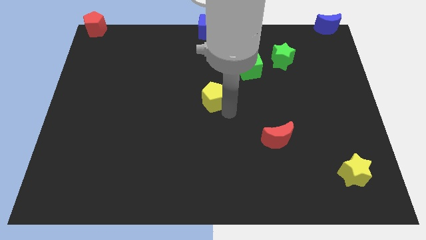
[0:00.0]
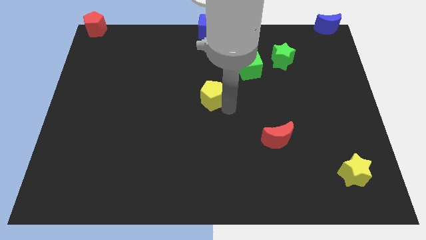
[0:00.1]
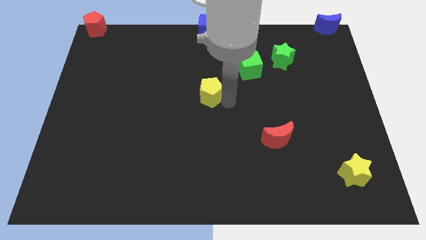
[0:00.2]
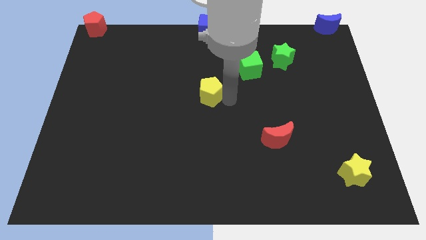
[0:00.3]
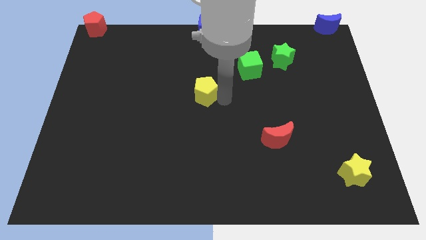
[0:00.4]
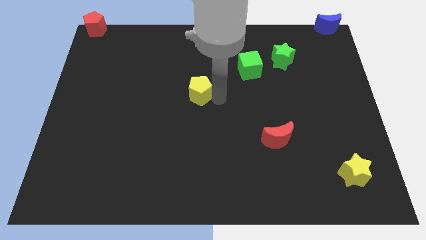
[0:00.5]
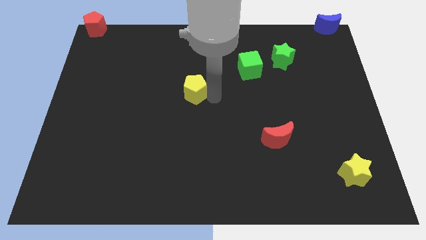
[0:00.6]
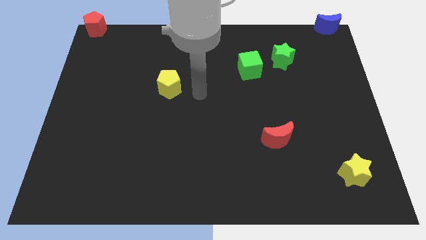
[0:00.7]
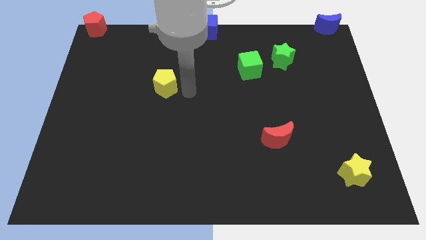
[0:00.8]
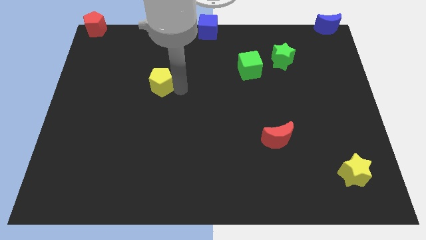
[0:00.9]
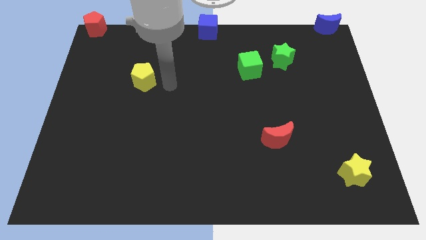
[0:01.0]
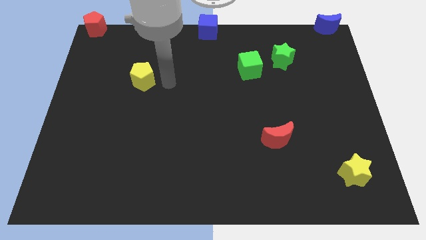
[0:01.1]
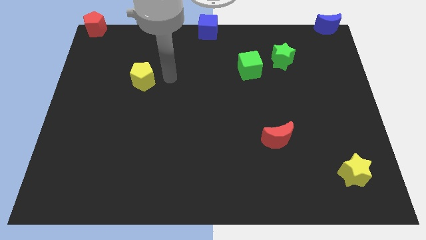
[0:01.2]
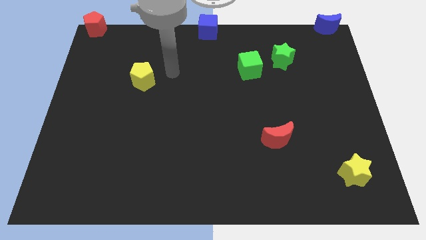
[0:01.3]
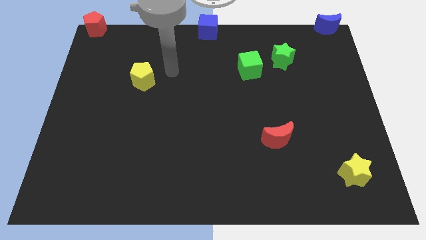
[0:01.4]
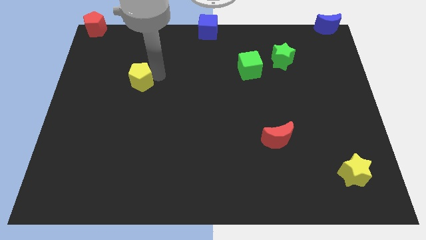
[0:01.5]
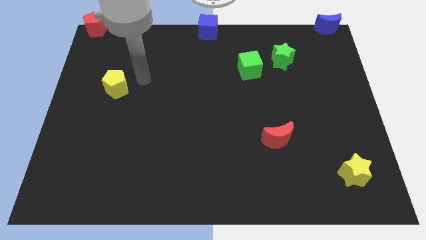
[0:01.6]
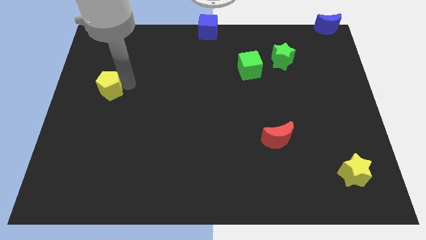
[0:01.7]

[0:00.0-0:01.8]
slide the yellow pentagon towards the centre left

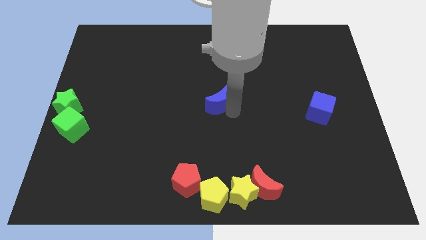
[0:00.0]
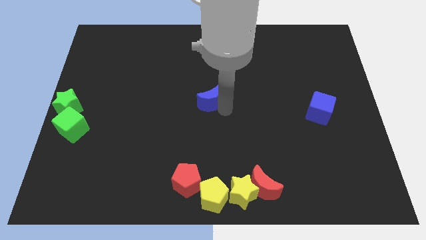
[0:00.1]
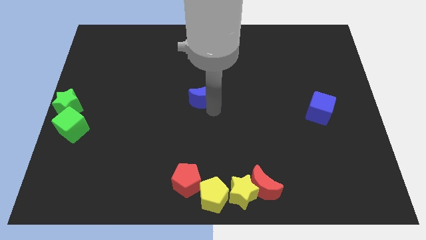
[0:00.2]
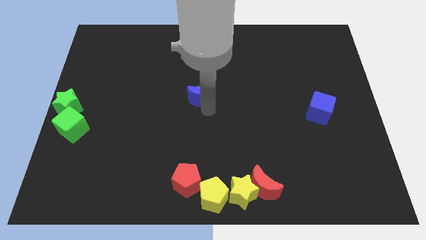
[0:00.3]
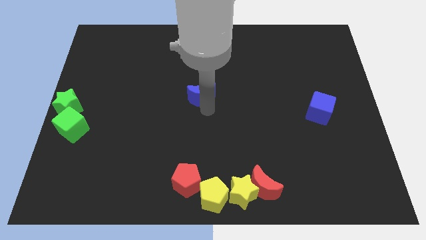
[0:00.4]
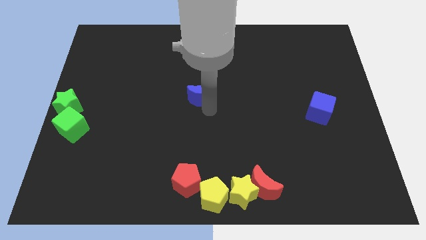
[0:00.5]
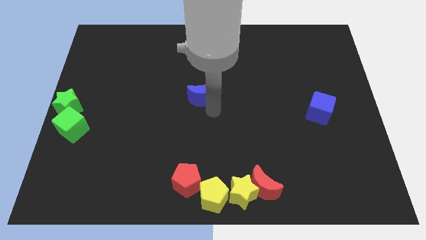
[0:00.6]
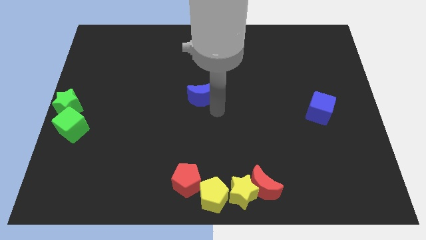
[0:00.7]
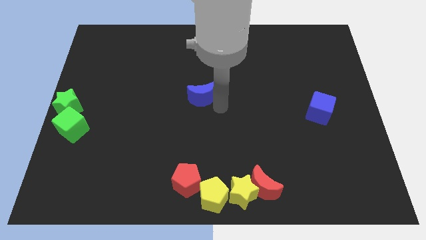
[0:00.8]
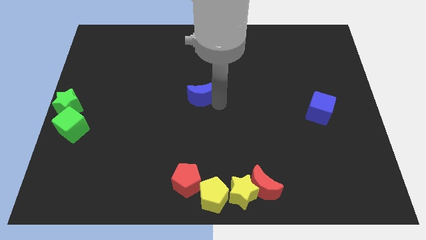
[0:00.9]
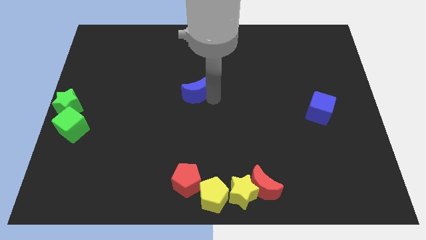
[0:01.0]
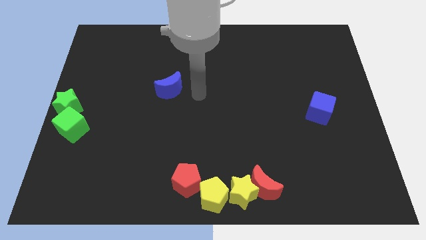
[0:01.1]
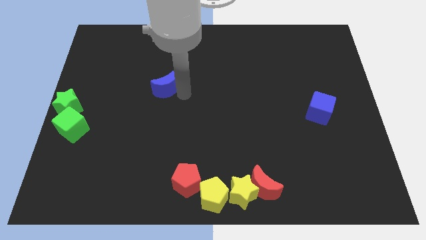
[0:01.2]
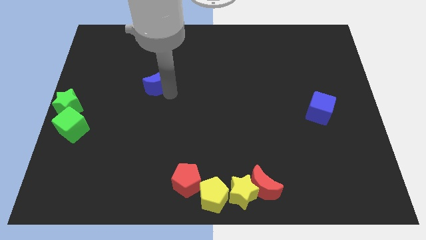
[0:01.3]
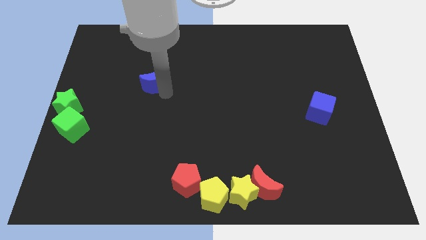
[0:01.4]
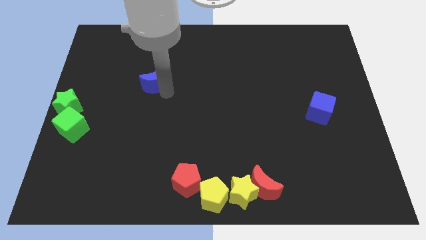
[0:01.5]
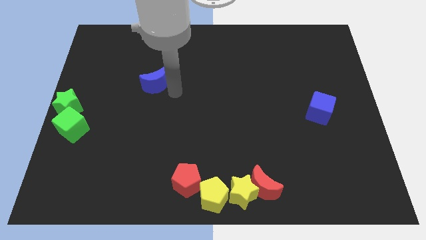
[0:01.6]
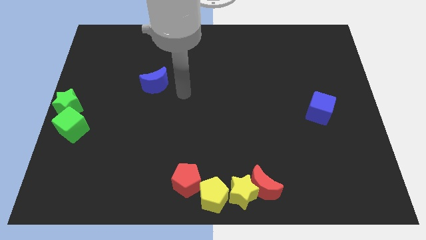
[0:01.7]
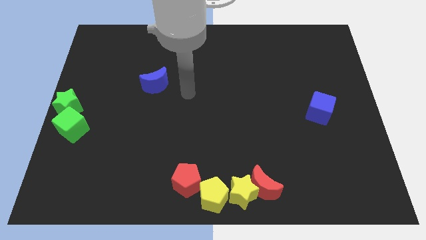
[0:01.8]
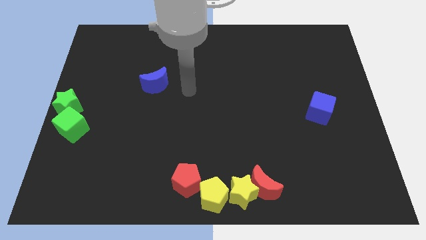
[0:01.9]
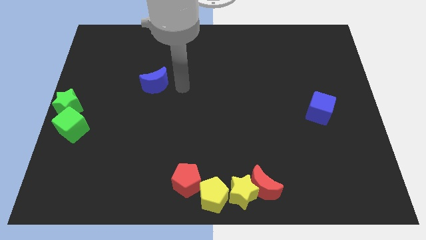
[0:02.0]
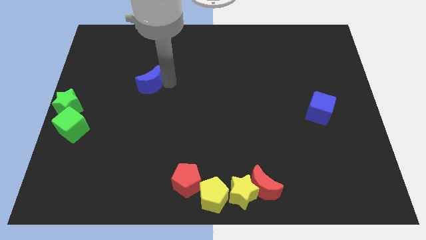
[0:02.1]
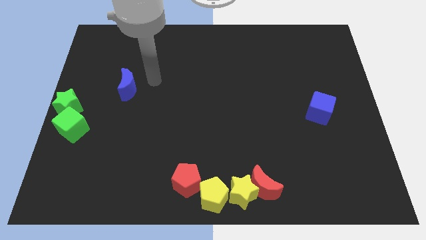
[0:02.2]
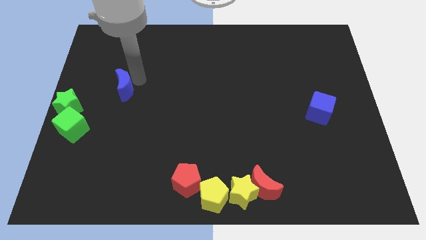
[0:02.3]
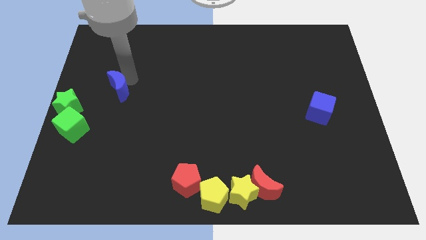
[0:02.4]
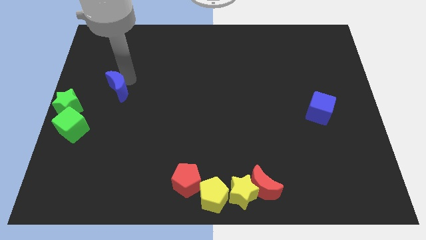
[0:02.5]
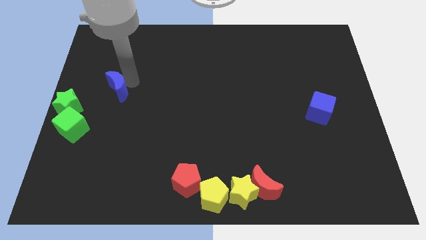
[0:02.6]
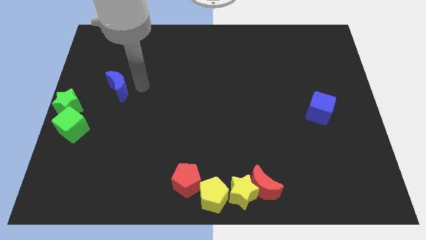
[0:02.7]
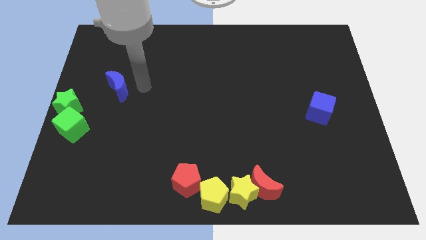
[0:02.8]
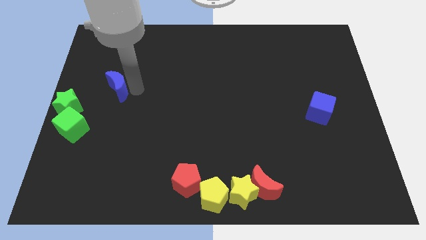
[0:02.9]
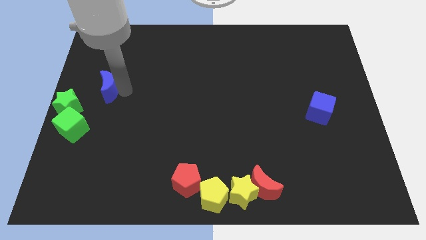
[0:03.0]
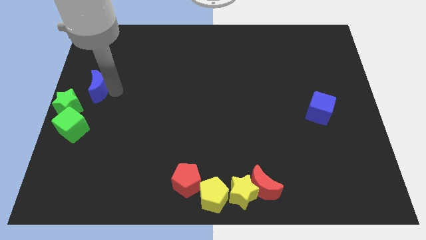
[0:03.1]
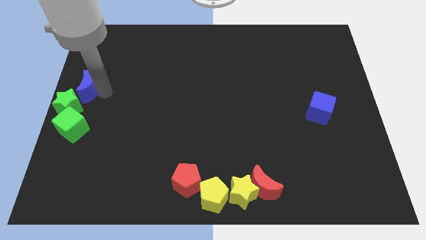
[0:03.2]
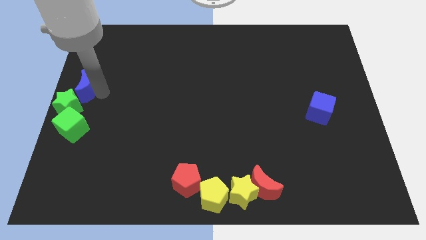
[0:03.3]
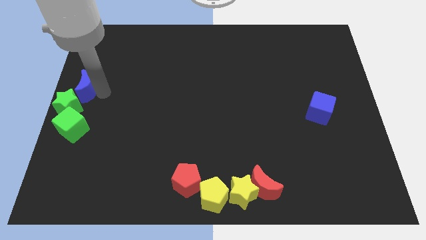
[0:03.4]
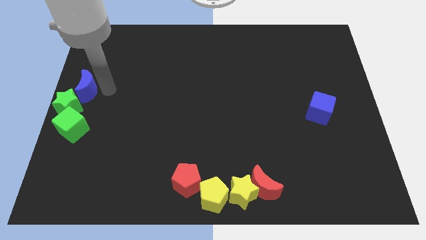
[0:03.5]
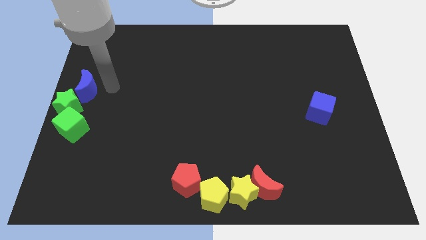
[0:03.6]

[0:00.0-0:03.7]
move the blue moon close to the green blocks

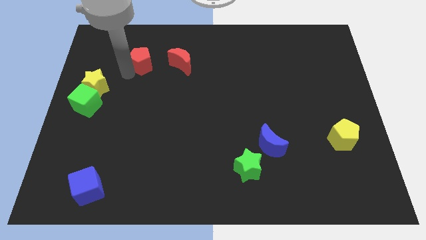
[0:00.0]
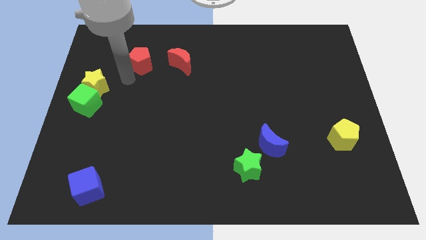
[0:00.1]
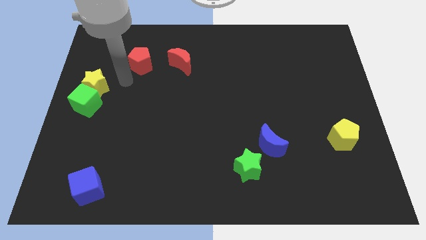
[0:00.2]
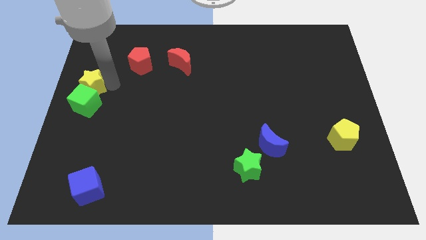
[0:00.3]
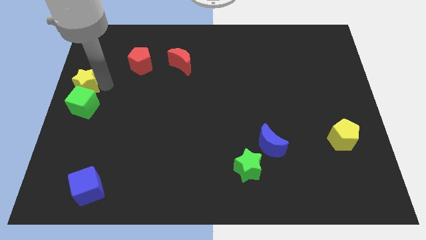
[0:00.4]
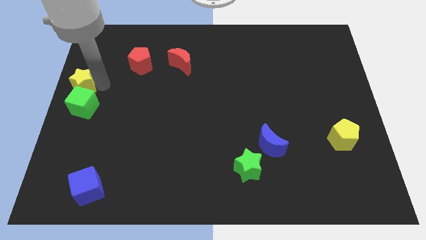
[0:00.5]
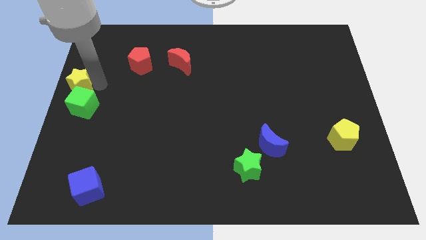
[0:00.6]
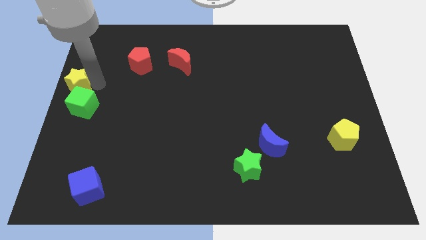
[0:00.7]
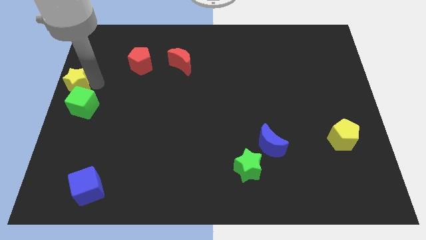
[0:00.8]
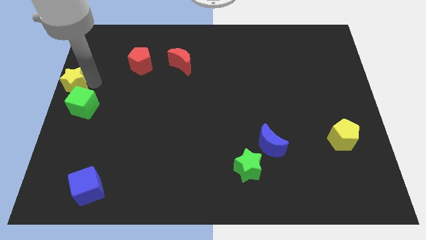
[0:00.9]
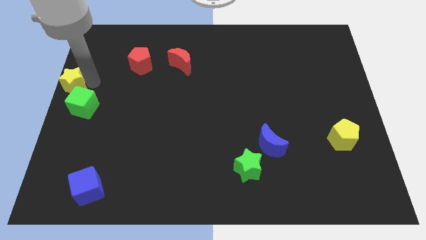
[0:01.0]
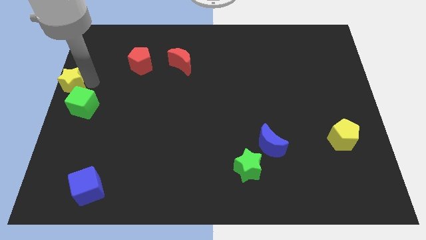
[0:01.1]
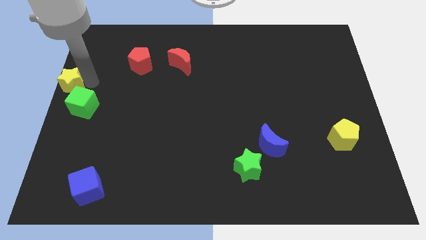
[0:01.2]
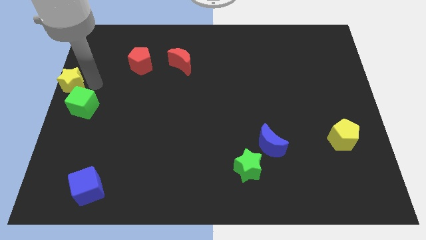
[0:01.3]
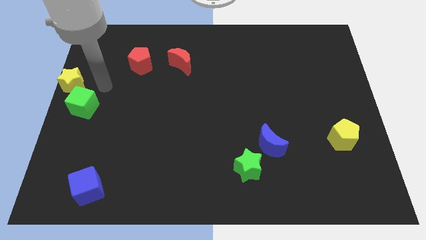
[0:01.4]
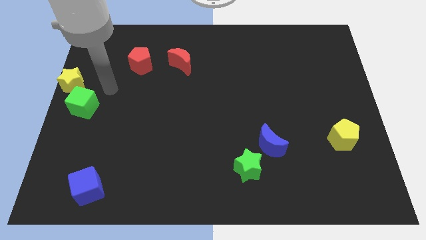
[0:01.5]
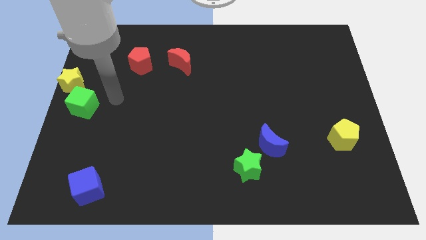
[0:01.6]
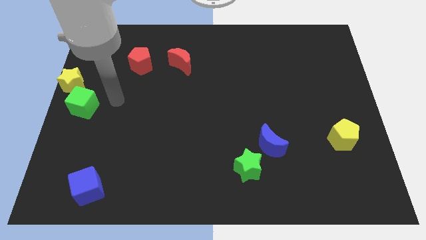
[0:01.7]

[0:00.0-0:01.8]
place the yellow star at the left center of the board

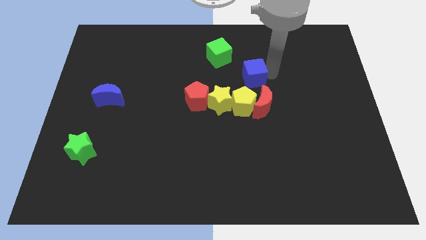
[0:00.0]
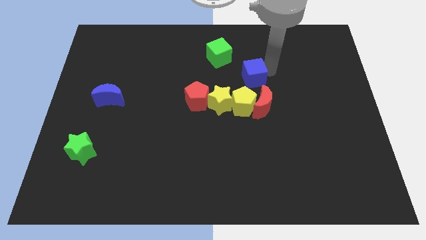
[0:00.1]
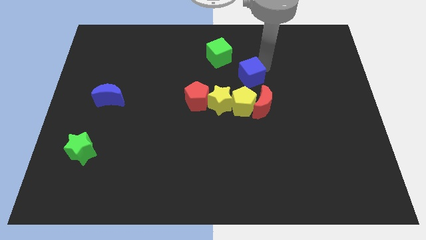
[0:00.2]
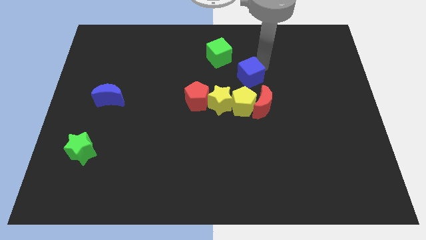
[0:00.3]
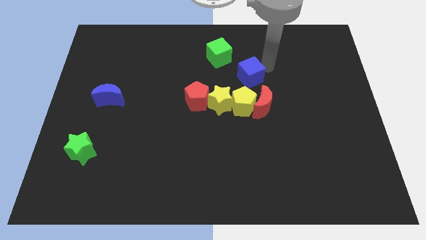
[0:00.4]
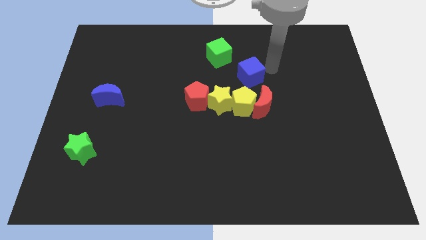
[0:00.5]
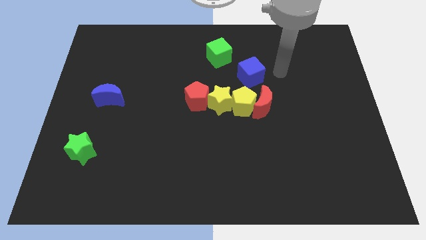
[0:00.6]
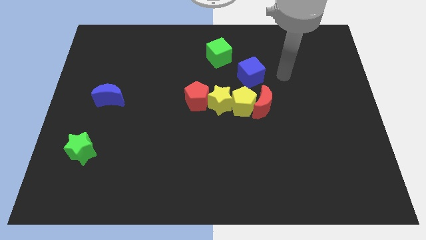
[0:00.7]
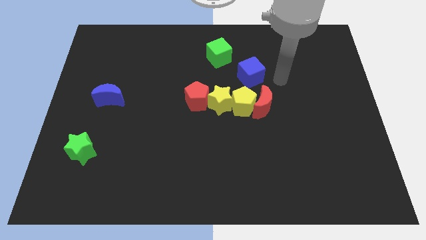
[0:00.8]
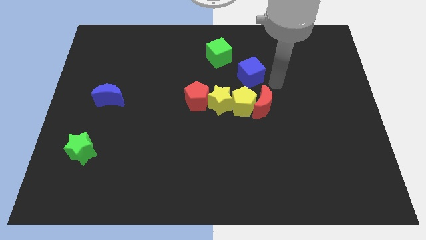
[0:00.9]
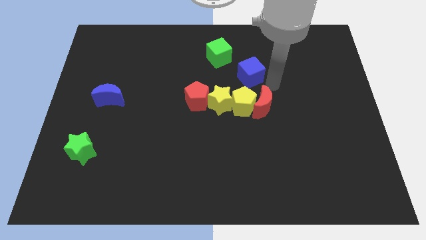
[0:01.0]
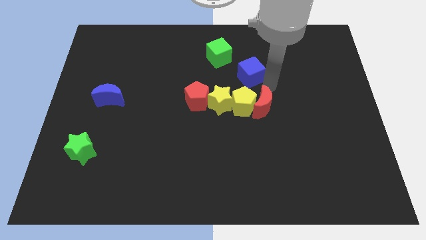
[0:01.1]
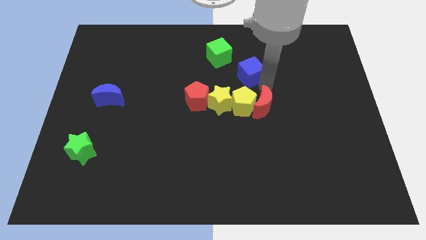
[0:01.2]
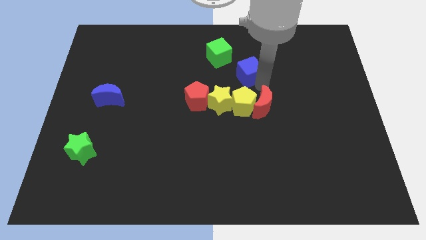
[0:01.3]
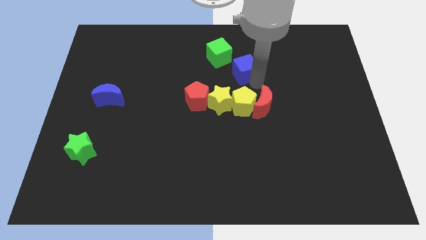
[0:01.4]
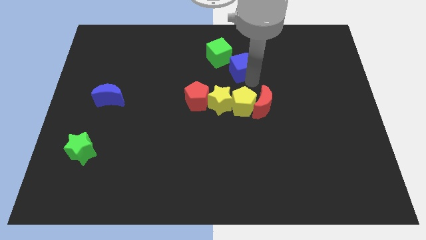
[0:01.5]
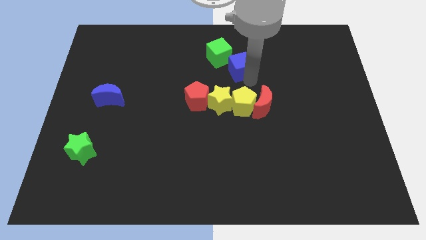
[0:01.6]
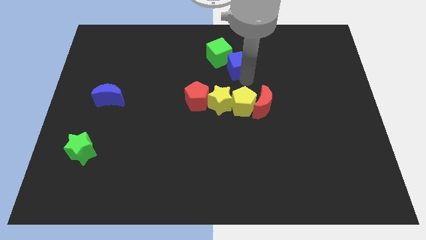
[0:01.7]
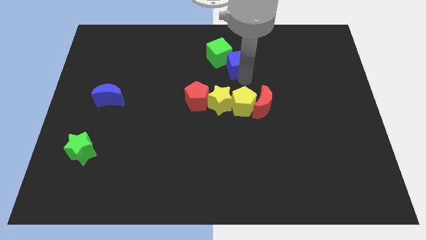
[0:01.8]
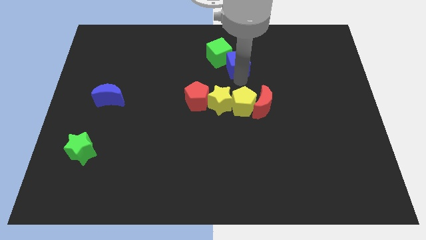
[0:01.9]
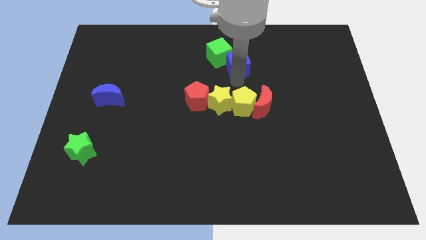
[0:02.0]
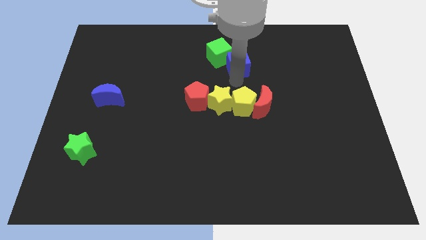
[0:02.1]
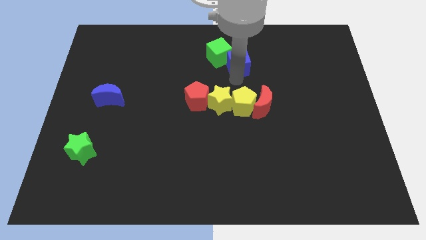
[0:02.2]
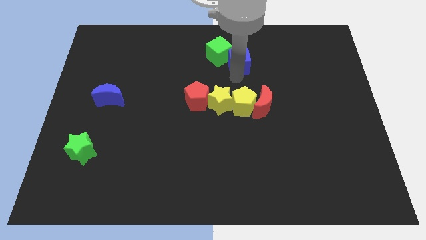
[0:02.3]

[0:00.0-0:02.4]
move the blue cube into the green cube
